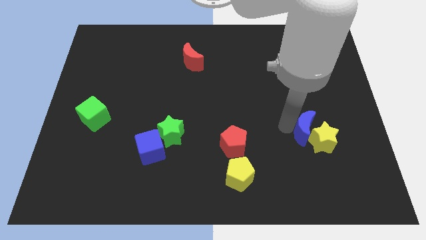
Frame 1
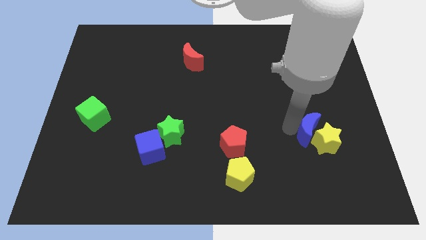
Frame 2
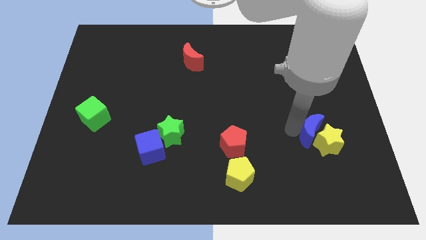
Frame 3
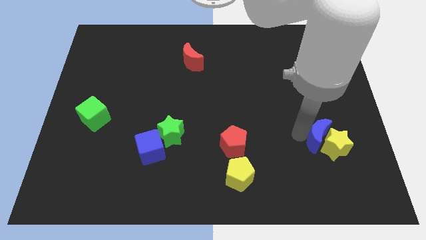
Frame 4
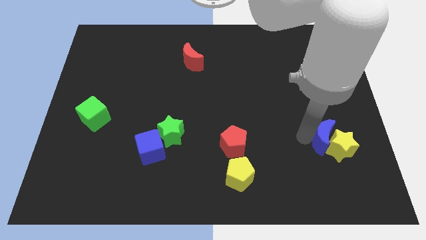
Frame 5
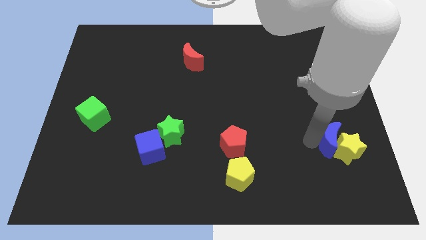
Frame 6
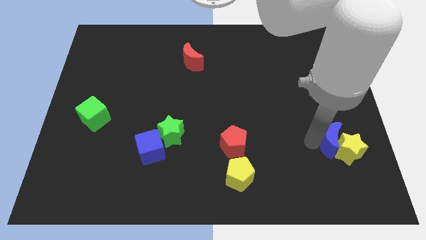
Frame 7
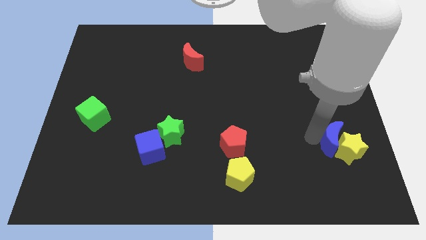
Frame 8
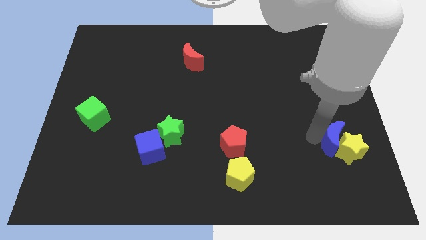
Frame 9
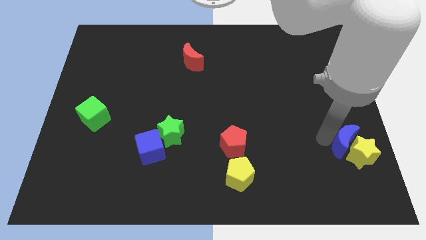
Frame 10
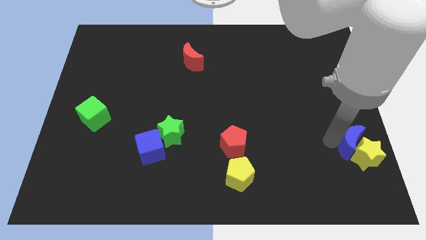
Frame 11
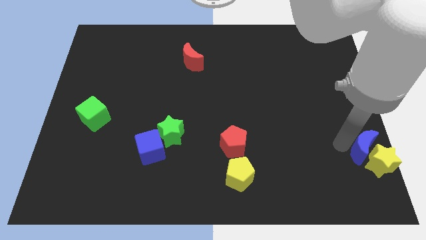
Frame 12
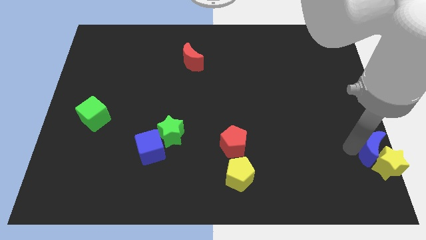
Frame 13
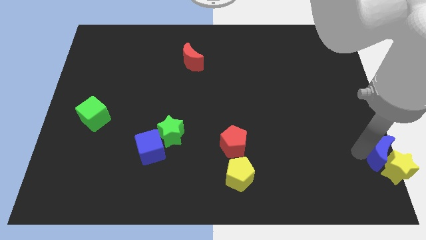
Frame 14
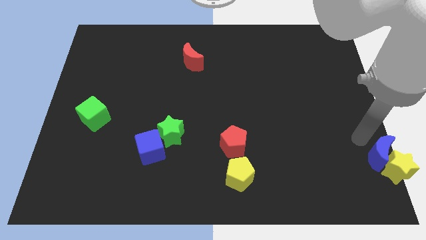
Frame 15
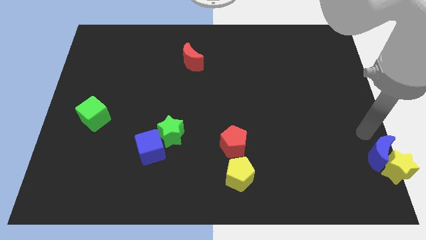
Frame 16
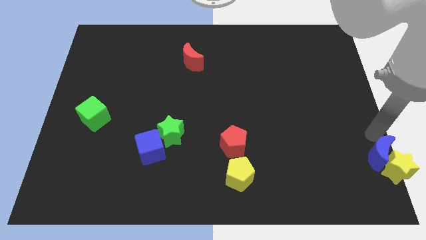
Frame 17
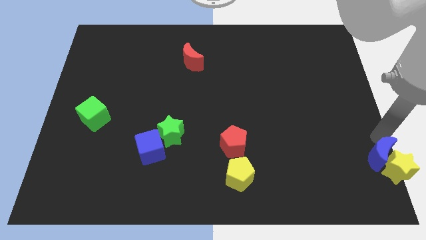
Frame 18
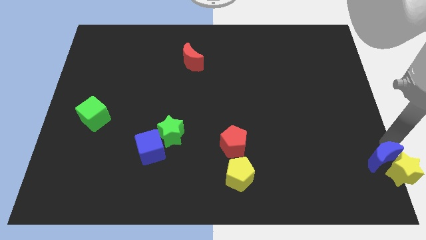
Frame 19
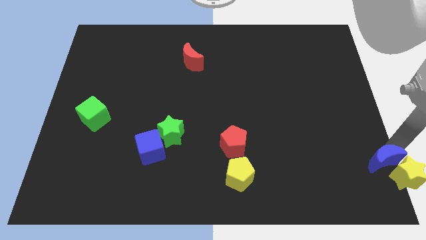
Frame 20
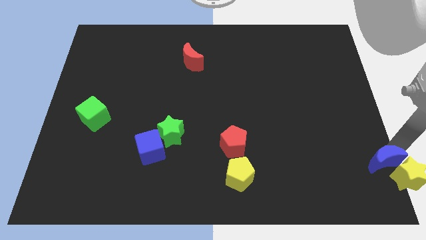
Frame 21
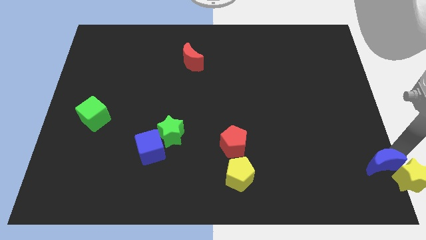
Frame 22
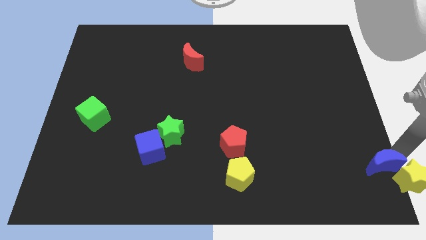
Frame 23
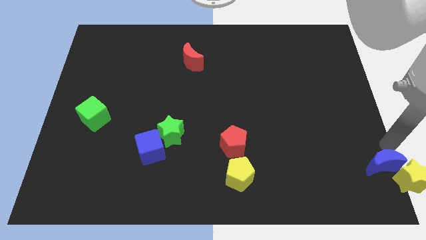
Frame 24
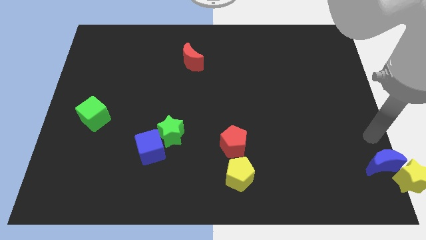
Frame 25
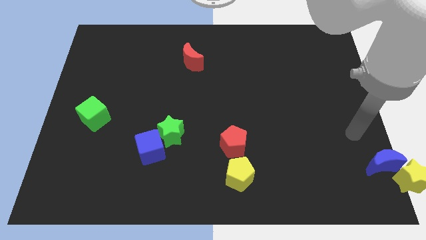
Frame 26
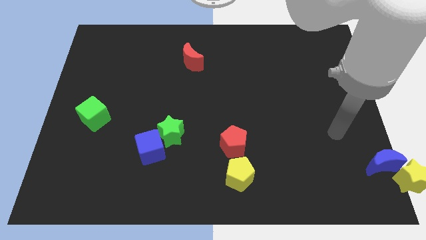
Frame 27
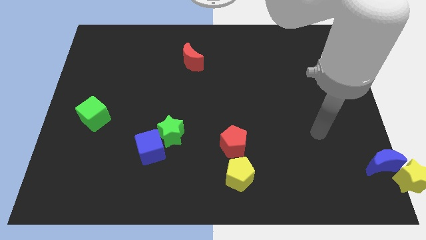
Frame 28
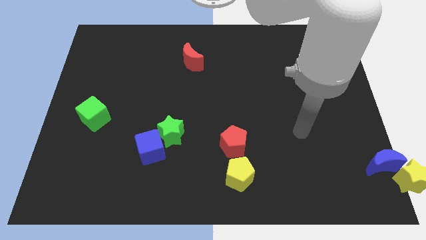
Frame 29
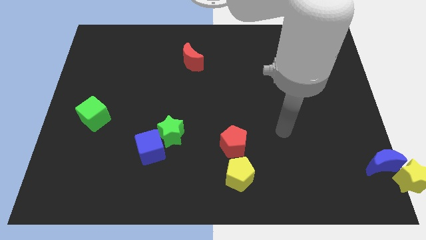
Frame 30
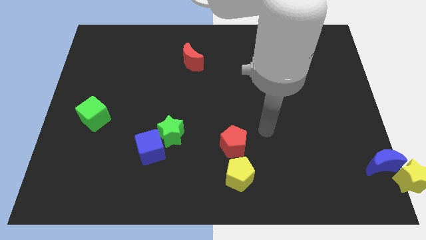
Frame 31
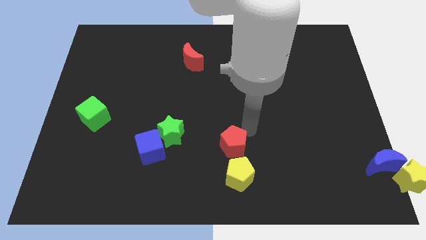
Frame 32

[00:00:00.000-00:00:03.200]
place the blue crescent and the yellow star at the bottom right corner

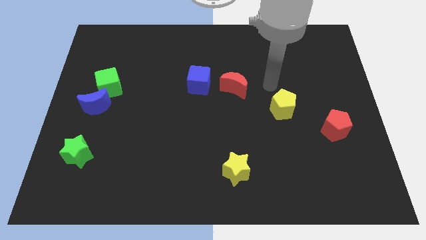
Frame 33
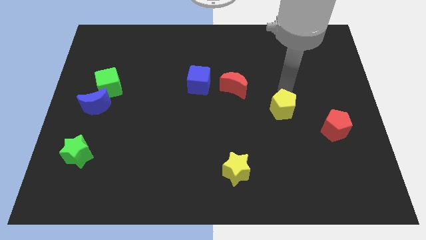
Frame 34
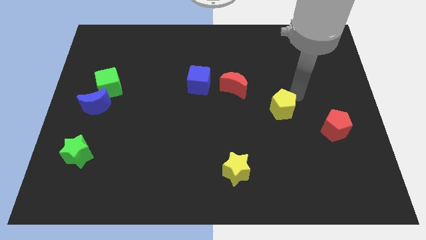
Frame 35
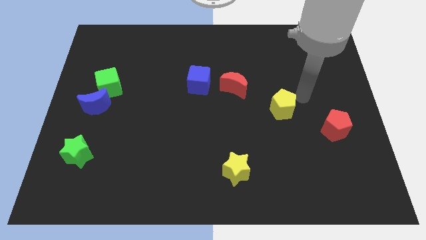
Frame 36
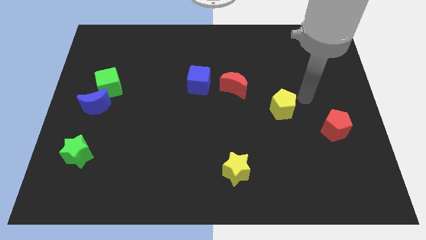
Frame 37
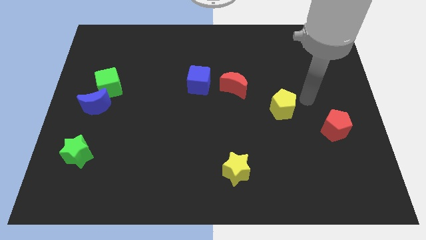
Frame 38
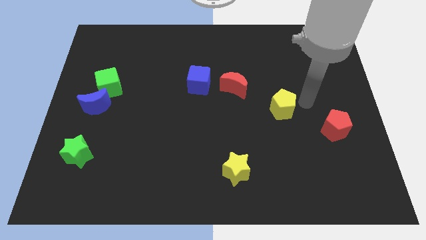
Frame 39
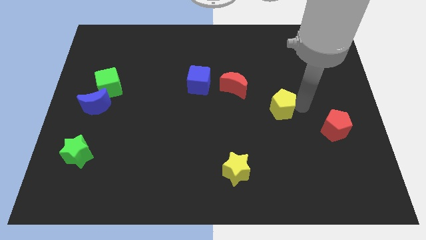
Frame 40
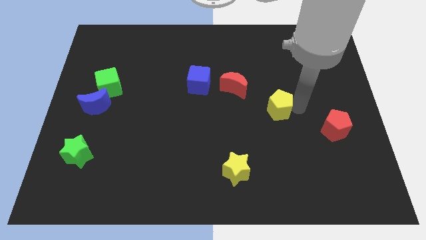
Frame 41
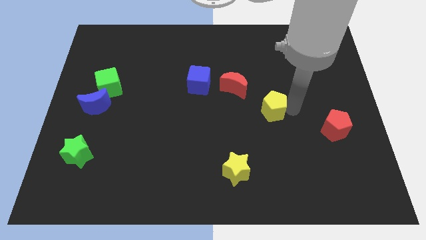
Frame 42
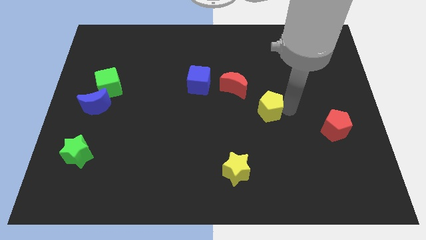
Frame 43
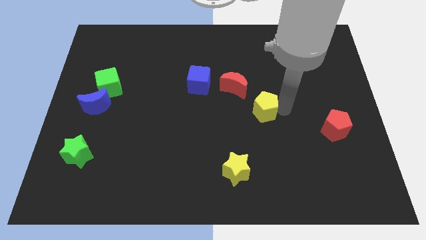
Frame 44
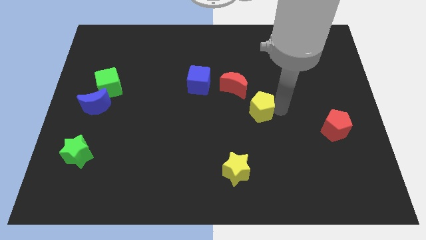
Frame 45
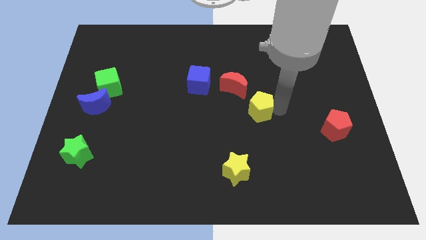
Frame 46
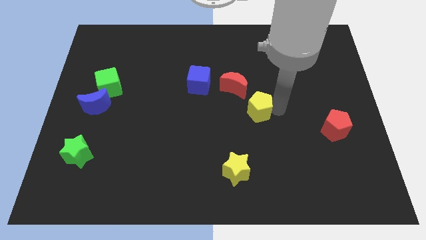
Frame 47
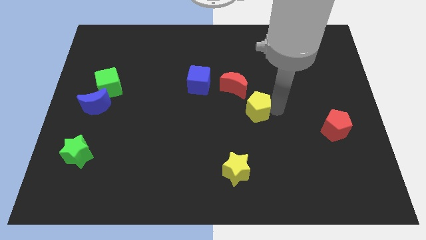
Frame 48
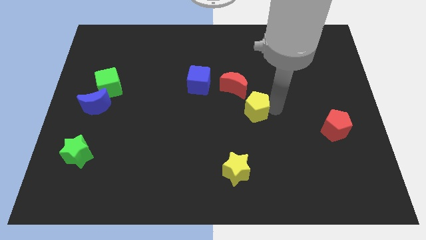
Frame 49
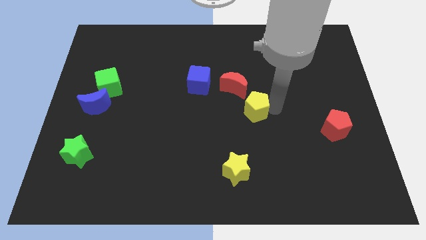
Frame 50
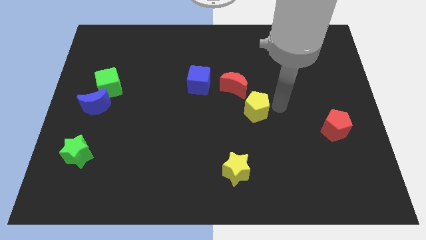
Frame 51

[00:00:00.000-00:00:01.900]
move the yellow pentagon to the bottom right side of the red crescent

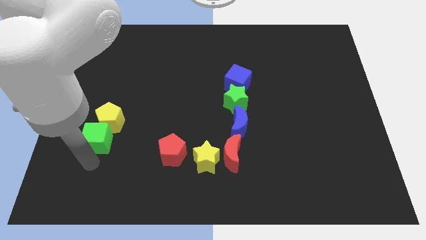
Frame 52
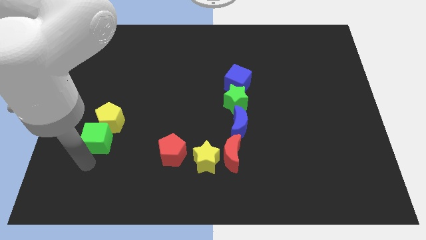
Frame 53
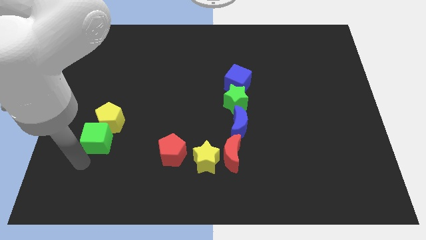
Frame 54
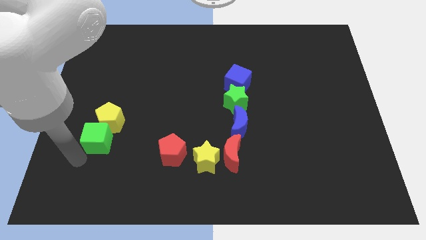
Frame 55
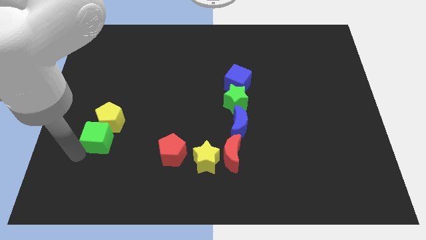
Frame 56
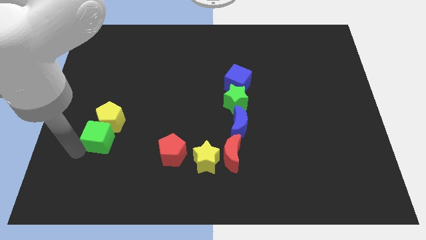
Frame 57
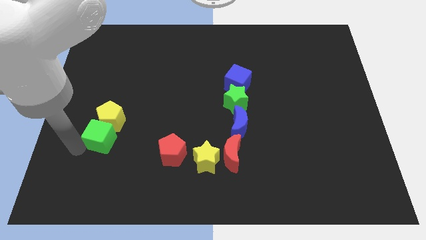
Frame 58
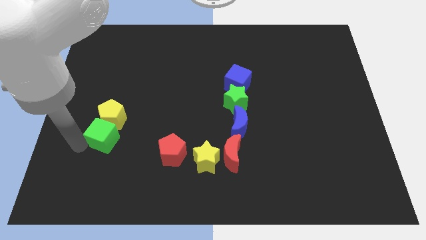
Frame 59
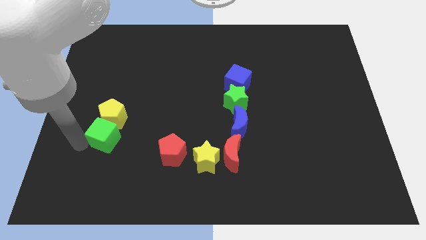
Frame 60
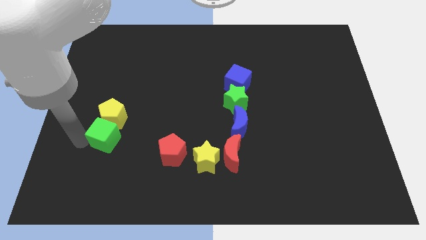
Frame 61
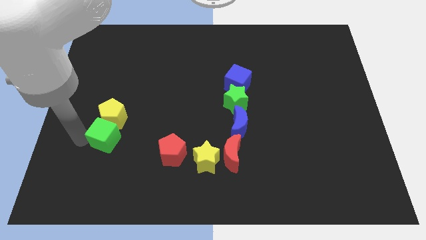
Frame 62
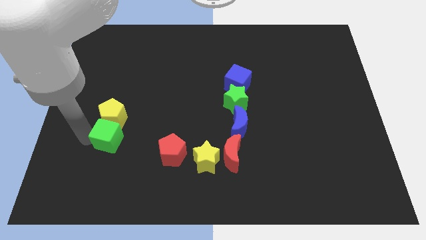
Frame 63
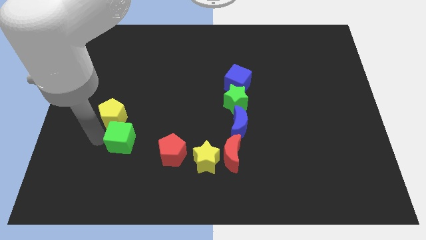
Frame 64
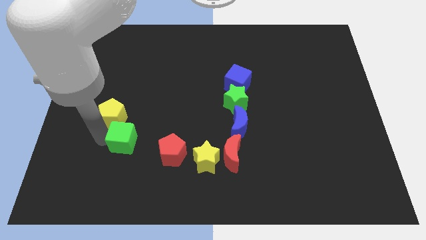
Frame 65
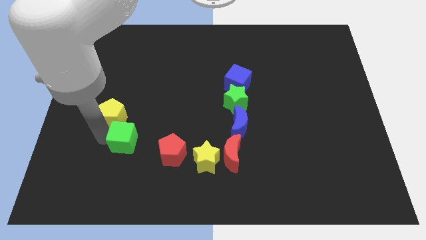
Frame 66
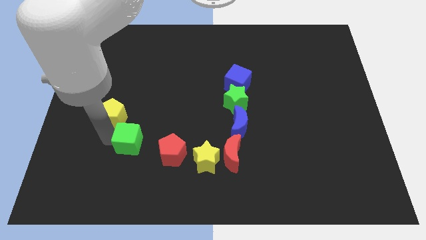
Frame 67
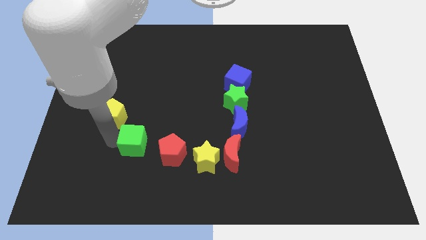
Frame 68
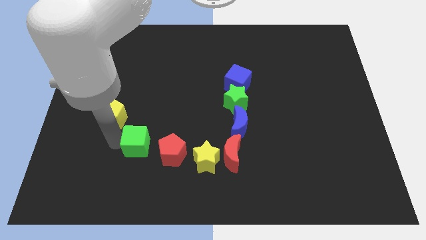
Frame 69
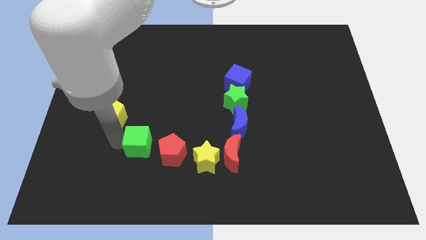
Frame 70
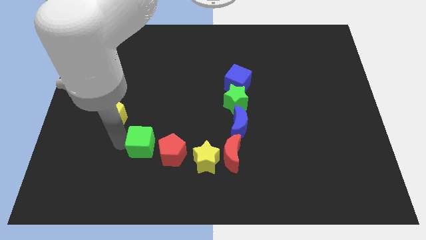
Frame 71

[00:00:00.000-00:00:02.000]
separate the green cube from the yellow pentagon

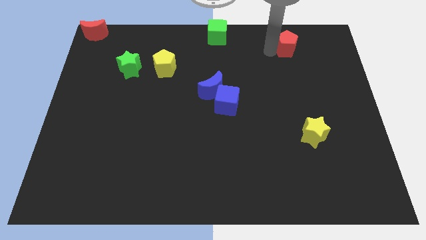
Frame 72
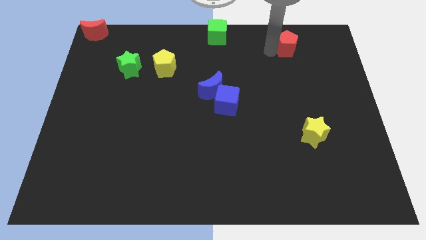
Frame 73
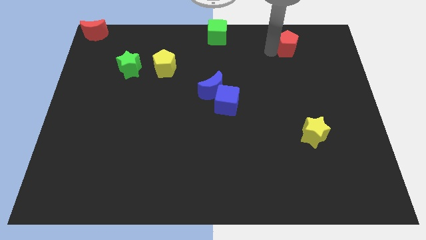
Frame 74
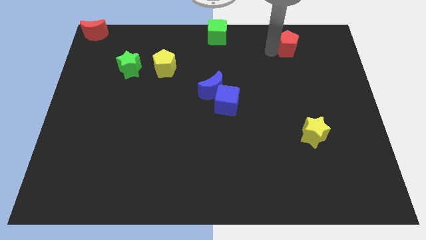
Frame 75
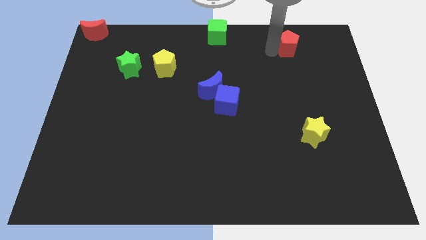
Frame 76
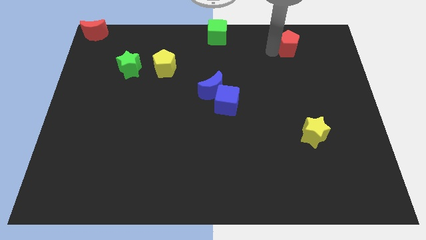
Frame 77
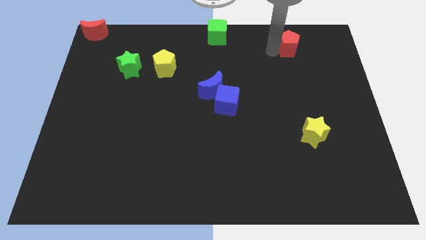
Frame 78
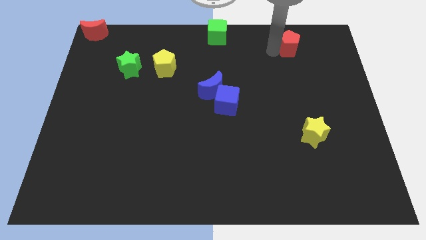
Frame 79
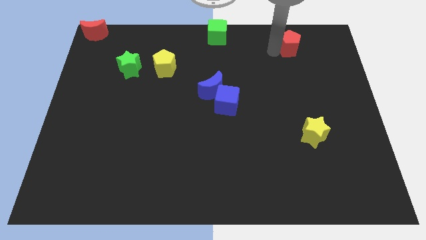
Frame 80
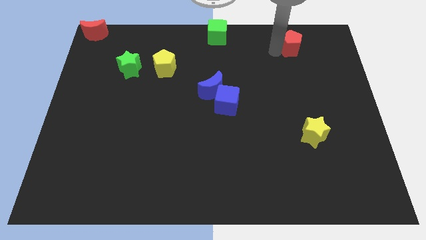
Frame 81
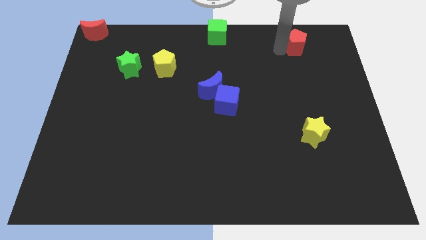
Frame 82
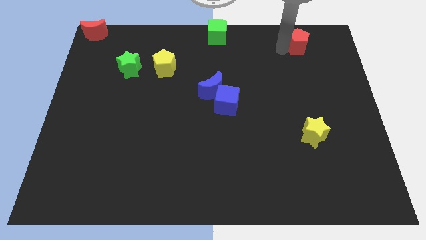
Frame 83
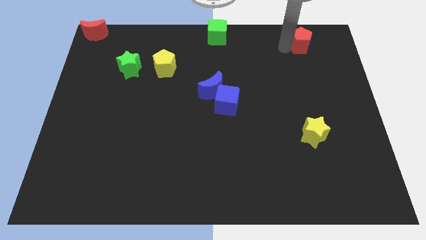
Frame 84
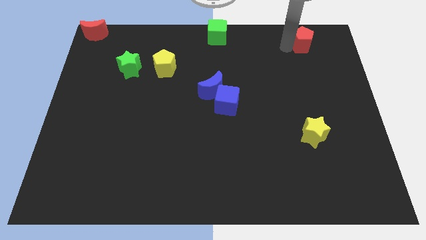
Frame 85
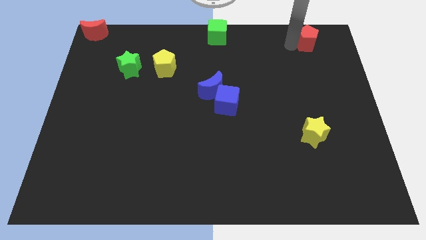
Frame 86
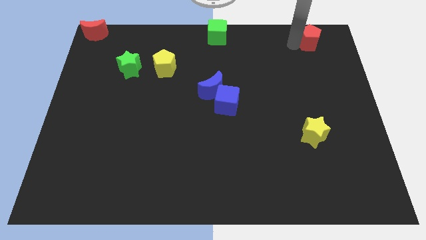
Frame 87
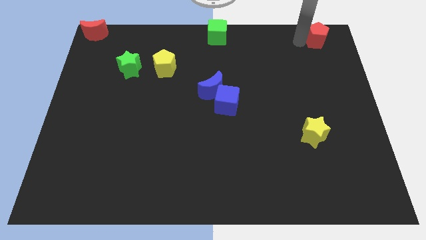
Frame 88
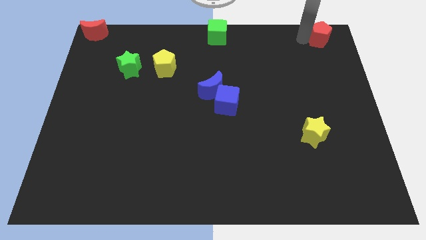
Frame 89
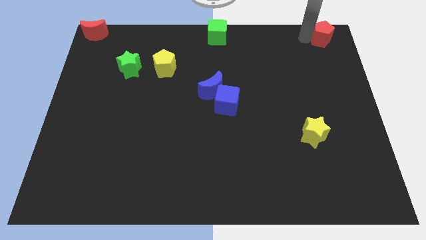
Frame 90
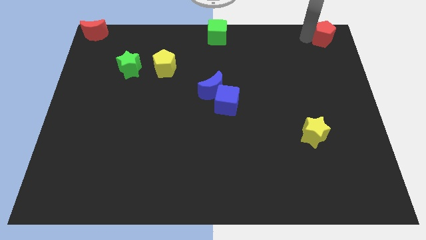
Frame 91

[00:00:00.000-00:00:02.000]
place red pentagon towards top right corner
